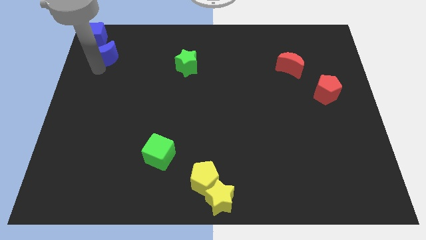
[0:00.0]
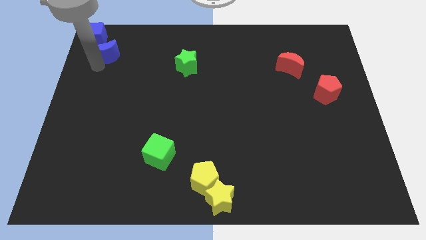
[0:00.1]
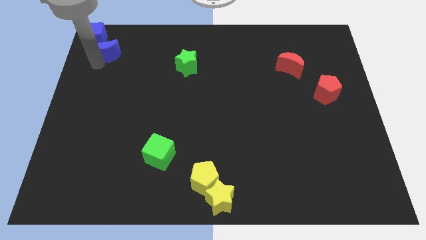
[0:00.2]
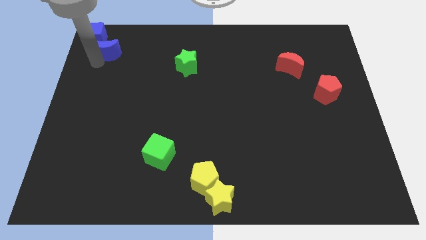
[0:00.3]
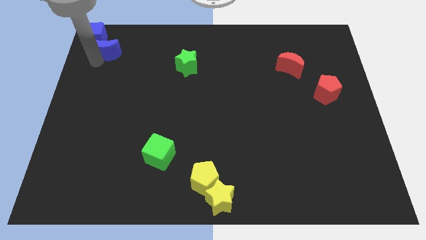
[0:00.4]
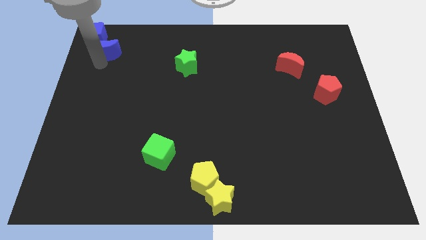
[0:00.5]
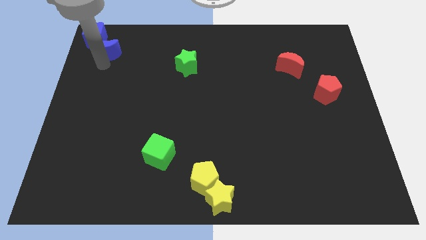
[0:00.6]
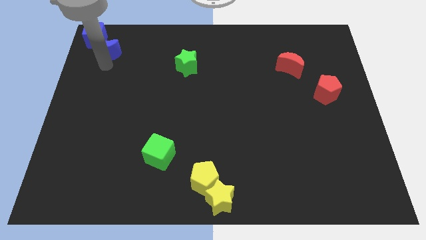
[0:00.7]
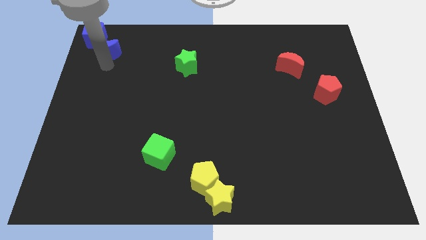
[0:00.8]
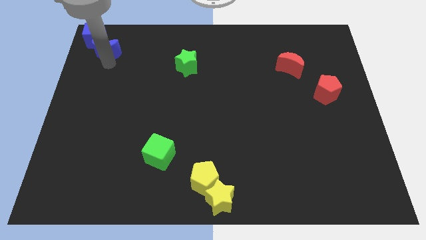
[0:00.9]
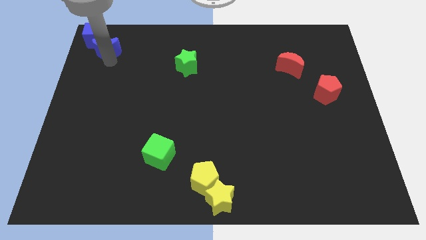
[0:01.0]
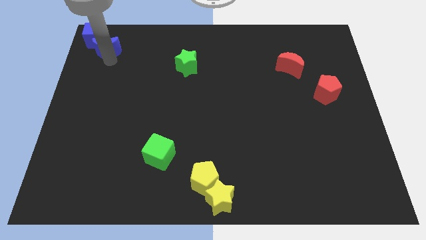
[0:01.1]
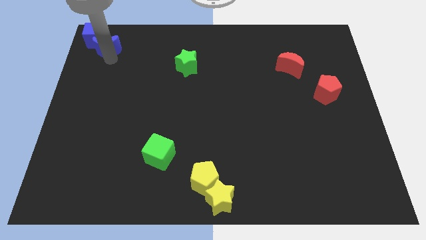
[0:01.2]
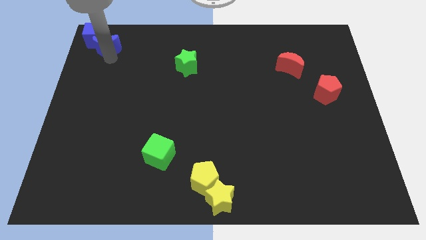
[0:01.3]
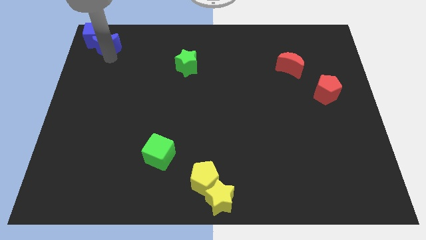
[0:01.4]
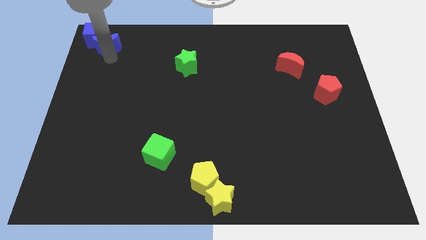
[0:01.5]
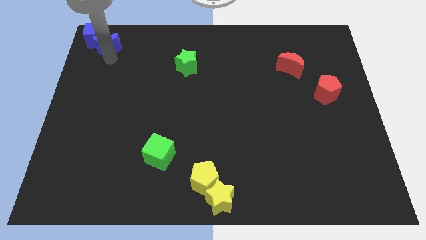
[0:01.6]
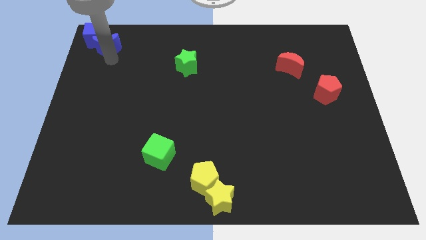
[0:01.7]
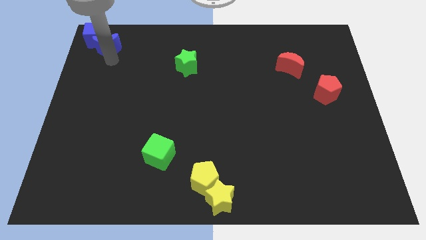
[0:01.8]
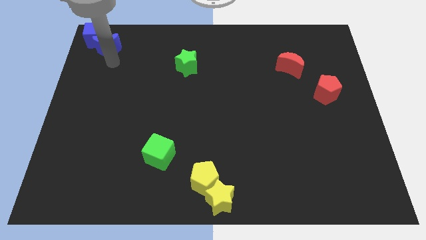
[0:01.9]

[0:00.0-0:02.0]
slightly move the blue crescent towards the top left corner of the board

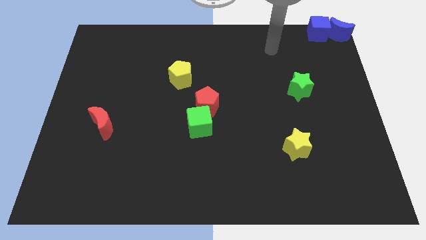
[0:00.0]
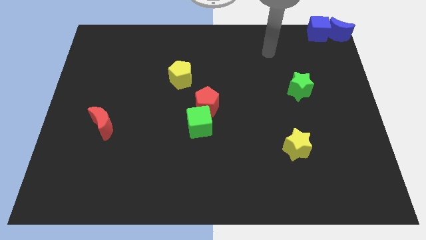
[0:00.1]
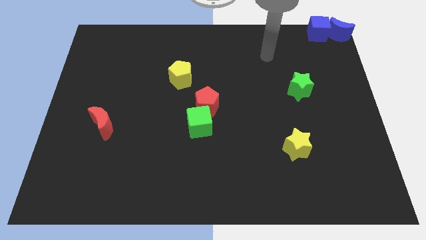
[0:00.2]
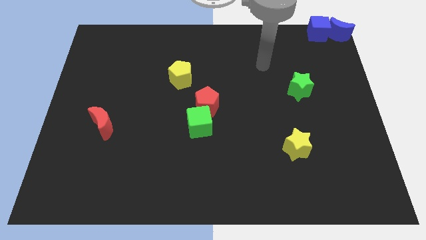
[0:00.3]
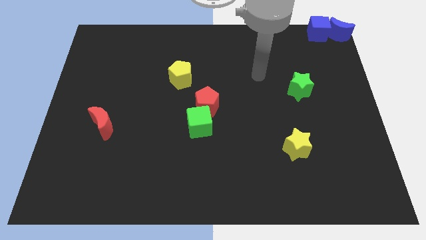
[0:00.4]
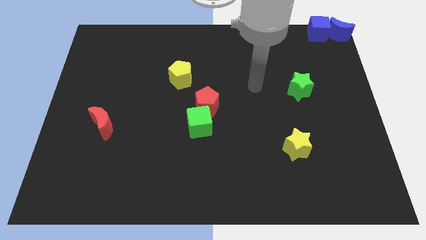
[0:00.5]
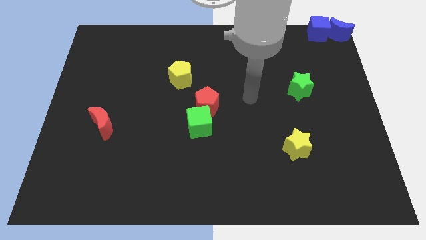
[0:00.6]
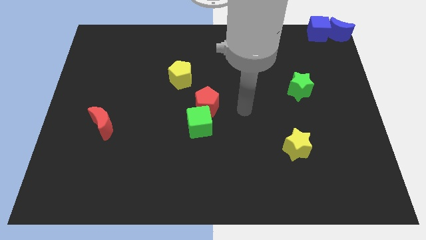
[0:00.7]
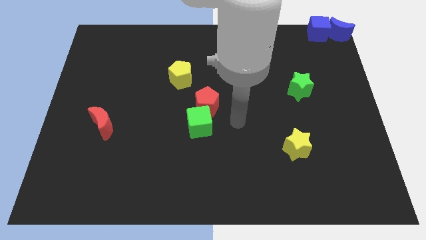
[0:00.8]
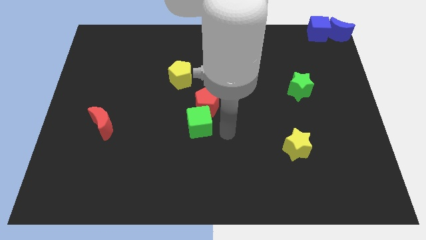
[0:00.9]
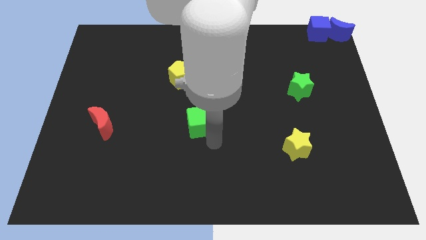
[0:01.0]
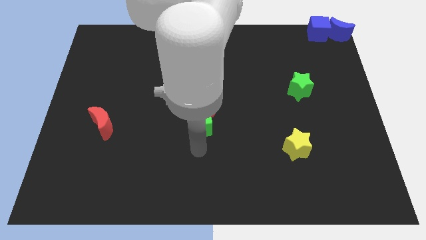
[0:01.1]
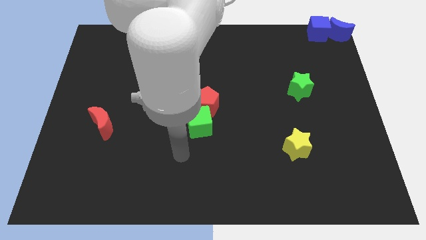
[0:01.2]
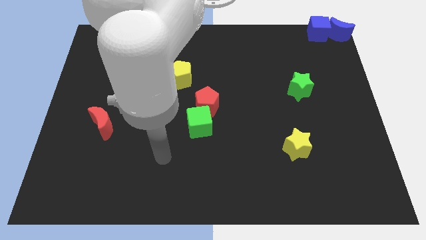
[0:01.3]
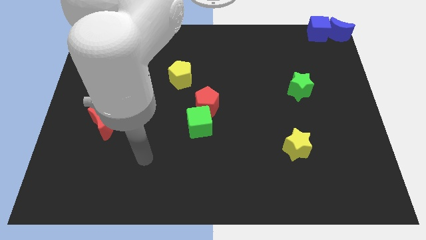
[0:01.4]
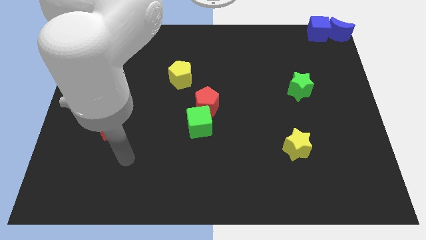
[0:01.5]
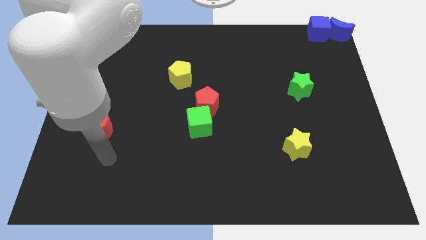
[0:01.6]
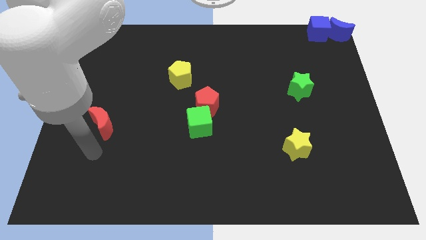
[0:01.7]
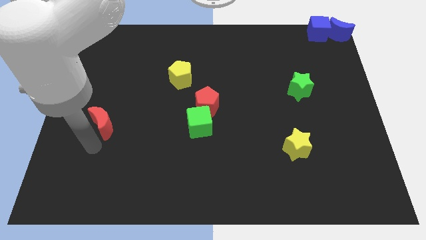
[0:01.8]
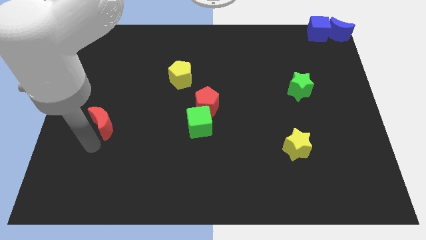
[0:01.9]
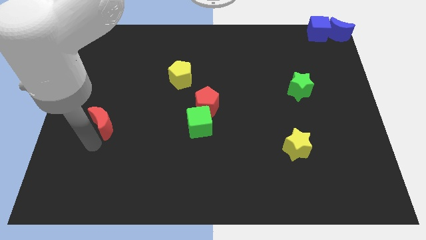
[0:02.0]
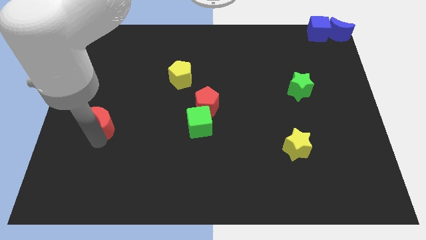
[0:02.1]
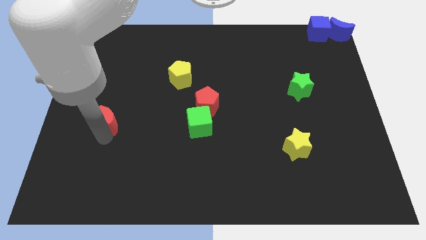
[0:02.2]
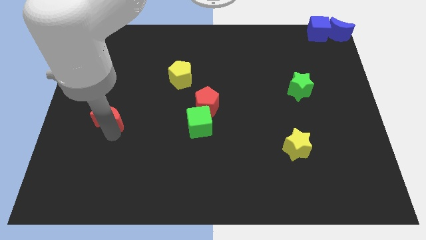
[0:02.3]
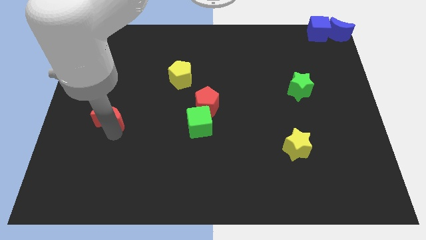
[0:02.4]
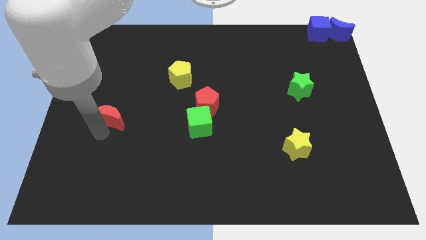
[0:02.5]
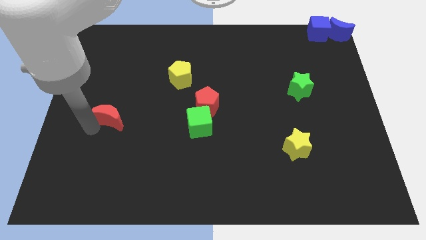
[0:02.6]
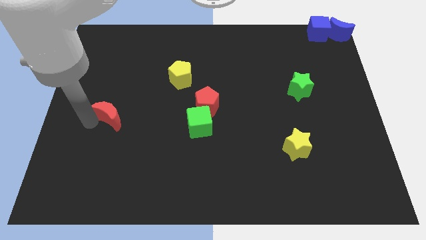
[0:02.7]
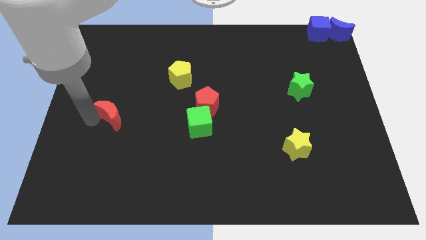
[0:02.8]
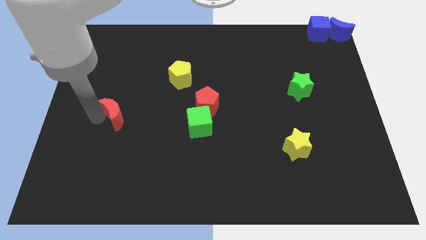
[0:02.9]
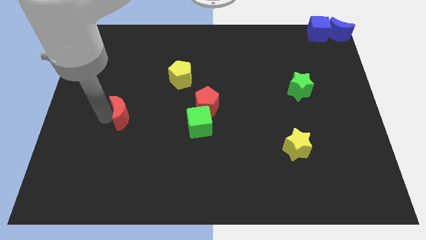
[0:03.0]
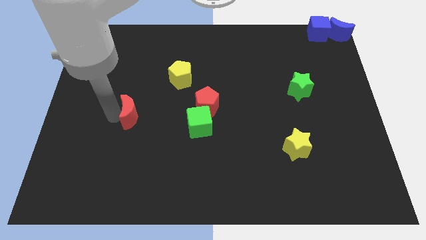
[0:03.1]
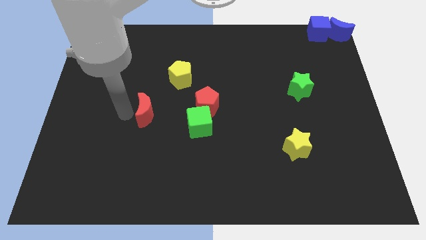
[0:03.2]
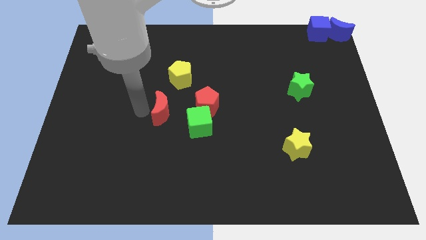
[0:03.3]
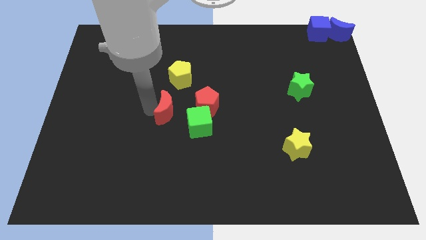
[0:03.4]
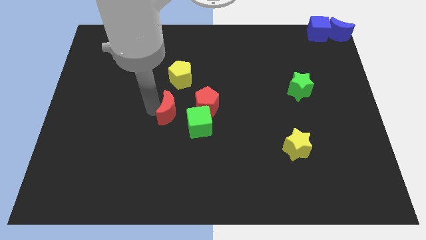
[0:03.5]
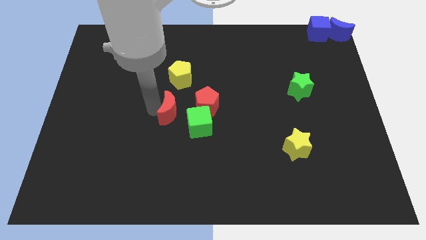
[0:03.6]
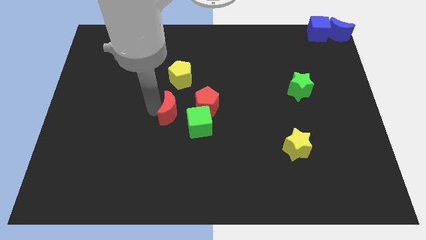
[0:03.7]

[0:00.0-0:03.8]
drag the red moon towards the red pentagon and green cube

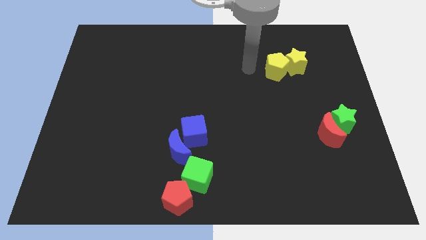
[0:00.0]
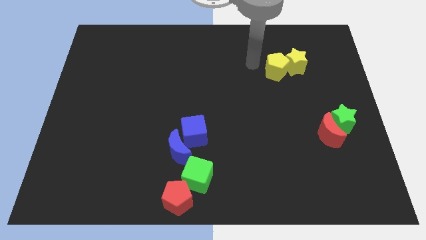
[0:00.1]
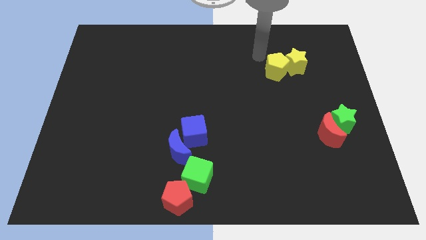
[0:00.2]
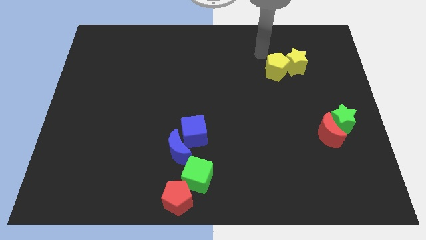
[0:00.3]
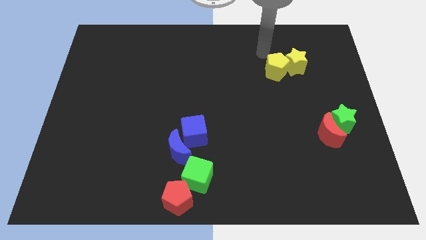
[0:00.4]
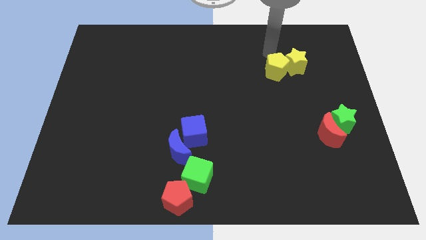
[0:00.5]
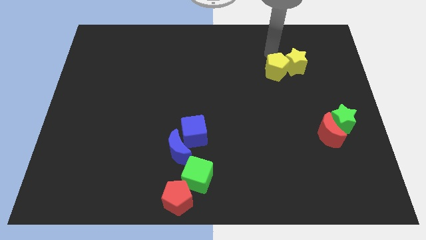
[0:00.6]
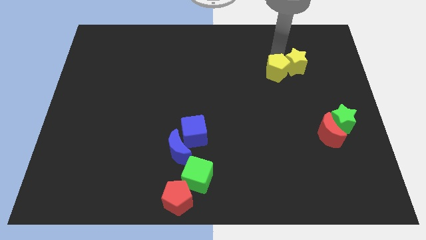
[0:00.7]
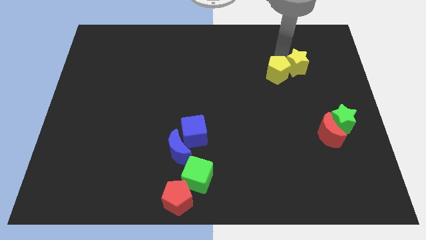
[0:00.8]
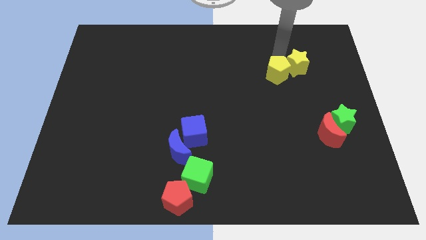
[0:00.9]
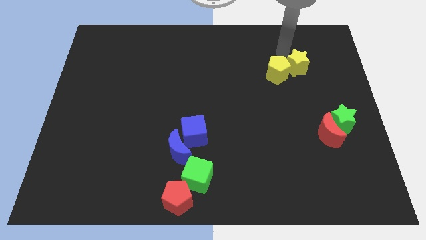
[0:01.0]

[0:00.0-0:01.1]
slightly push the yellow blocks towards the bottom side

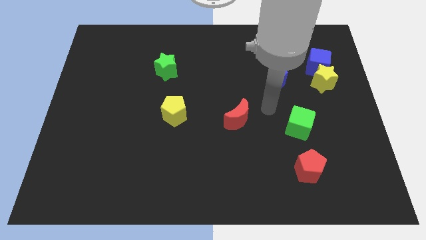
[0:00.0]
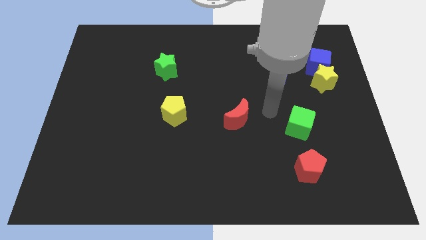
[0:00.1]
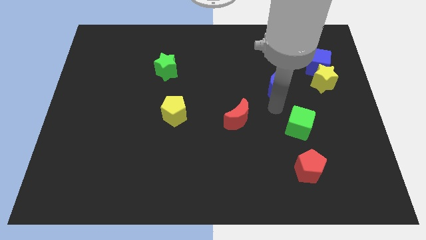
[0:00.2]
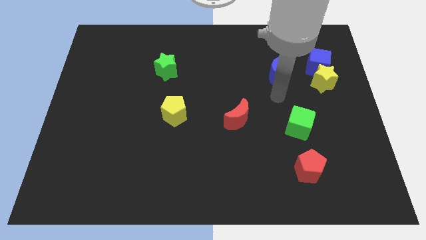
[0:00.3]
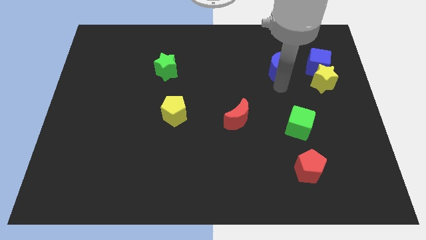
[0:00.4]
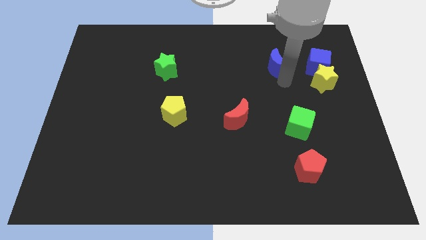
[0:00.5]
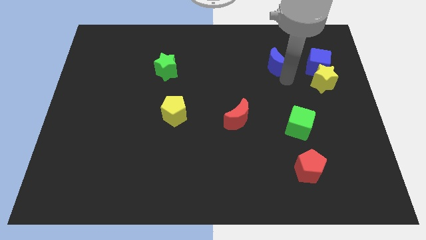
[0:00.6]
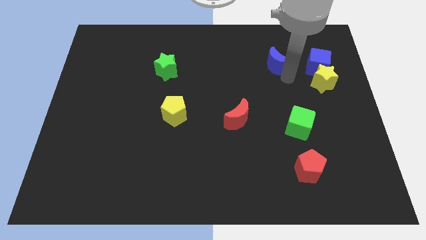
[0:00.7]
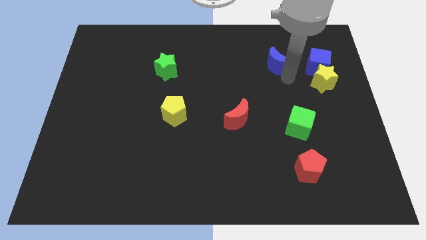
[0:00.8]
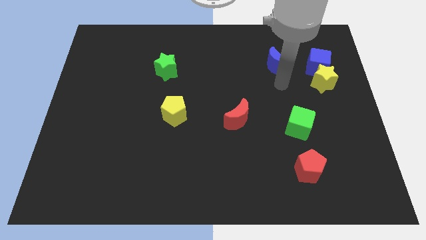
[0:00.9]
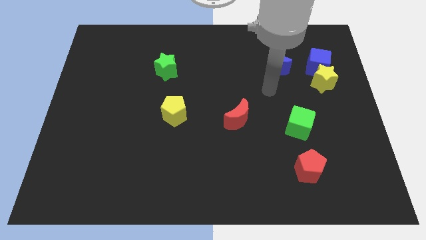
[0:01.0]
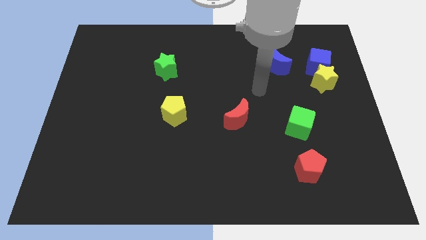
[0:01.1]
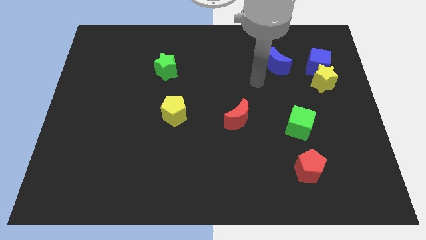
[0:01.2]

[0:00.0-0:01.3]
place blue moon to the right of blue cube

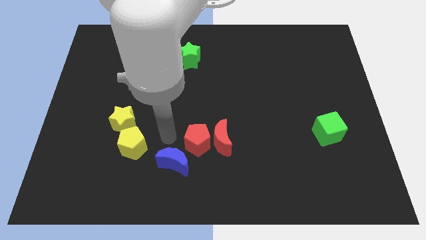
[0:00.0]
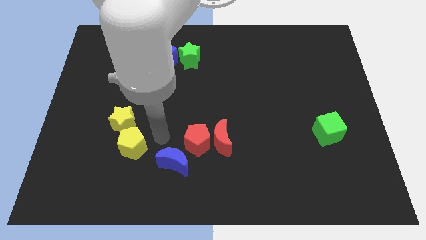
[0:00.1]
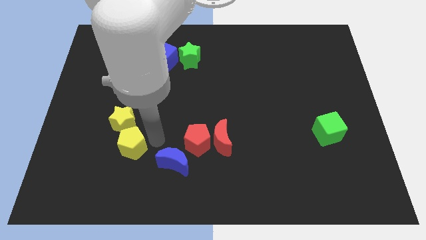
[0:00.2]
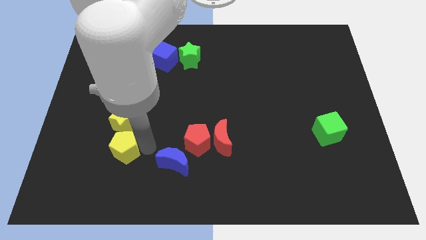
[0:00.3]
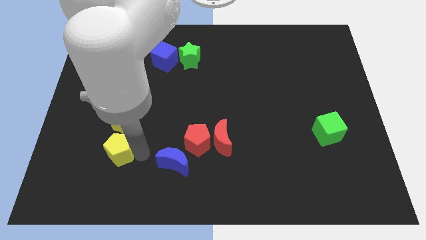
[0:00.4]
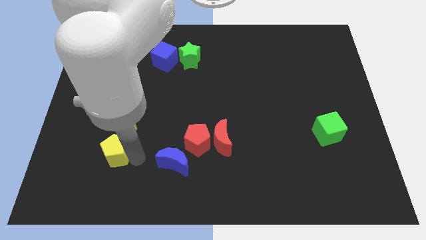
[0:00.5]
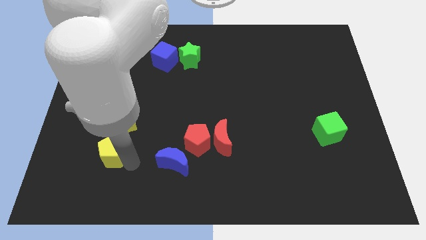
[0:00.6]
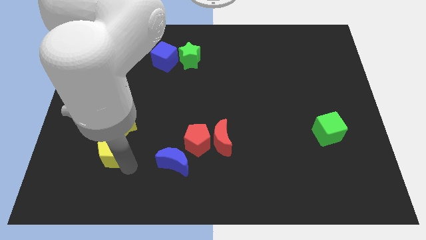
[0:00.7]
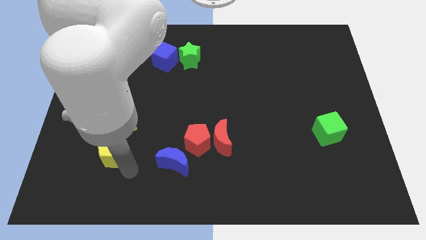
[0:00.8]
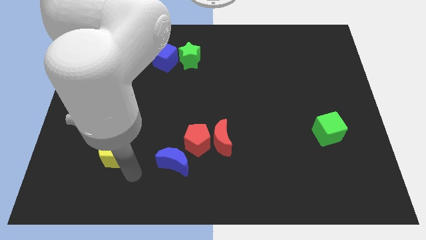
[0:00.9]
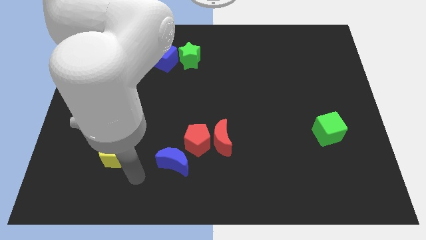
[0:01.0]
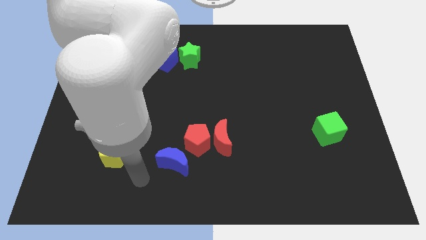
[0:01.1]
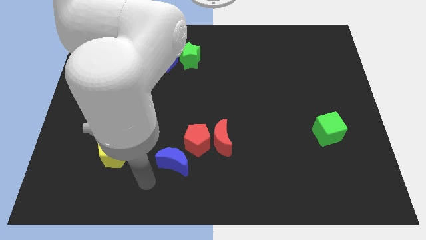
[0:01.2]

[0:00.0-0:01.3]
slightly push the yellow pentagon towards the bottom left side of the board
